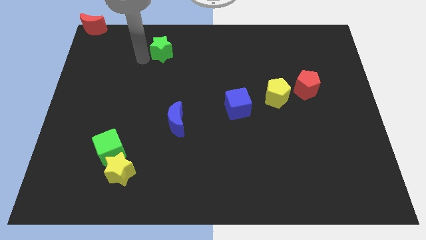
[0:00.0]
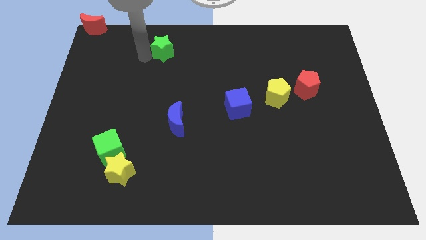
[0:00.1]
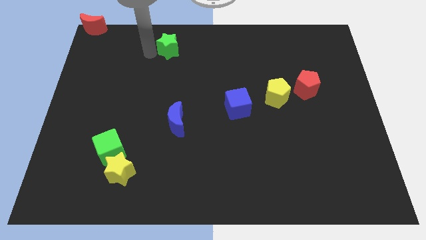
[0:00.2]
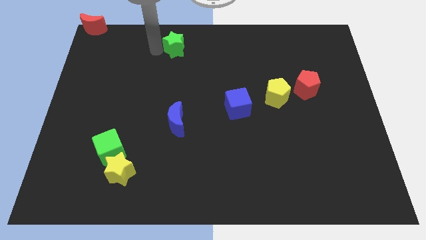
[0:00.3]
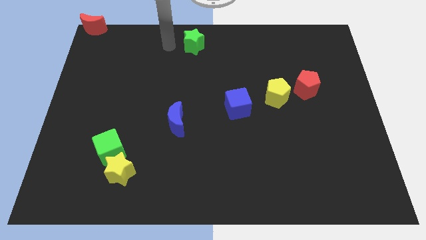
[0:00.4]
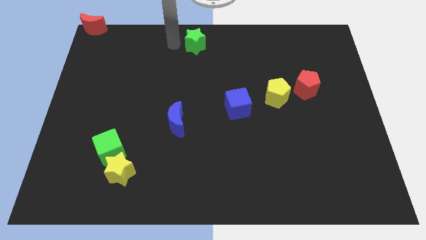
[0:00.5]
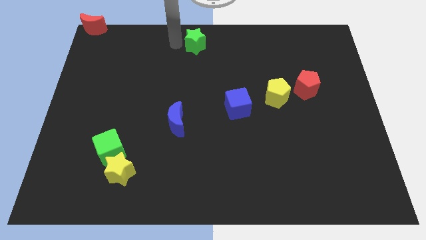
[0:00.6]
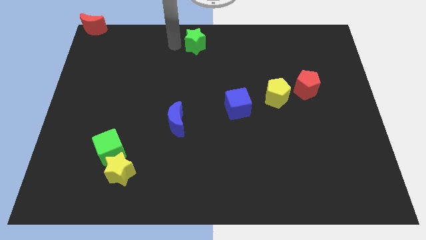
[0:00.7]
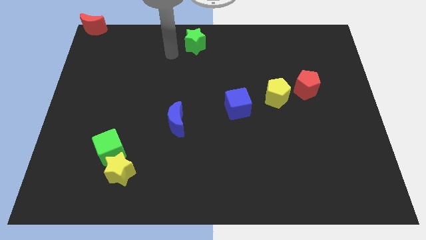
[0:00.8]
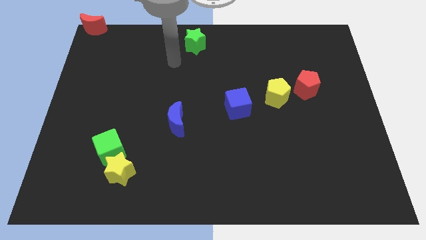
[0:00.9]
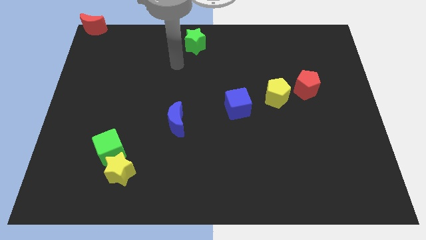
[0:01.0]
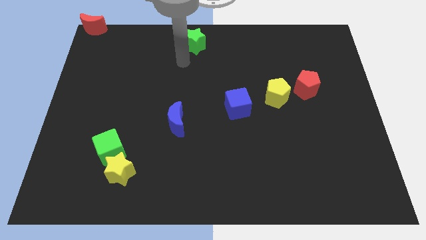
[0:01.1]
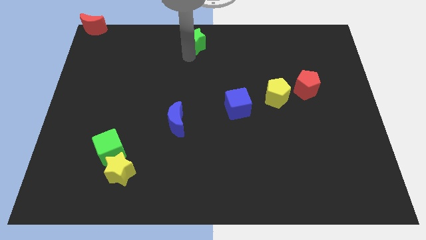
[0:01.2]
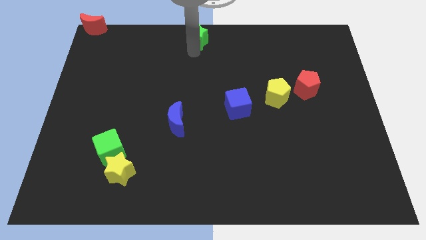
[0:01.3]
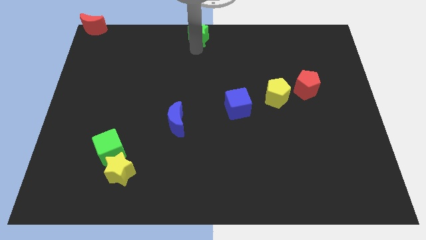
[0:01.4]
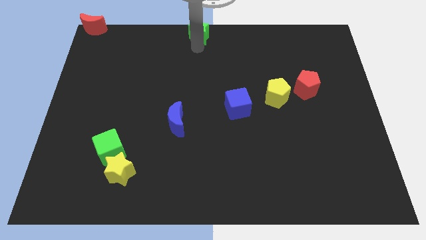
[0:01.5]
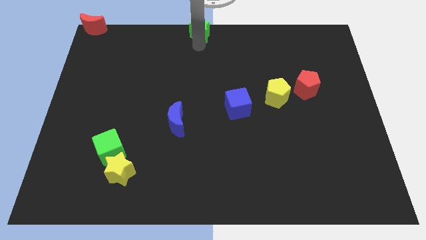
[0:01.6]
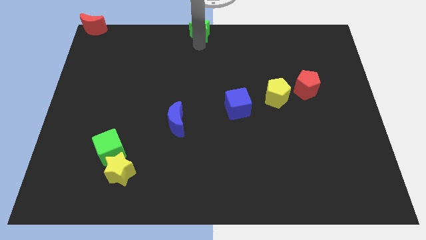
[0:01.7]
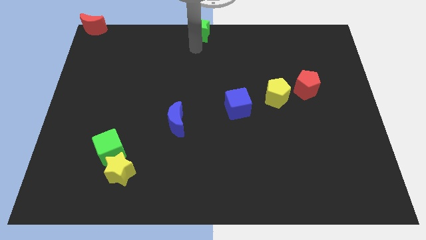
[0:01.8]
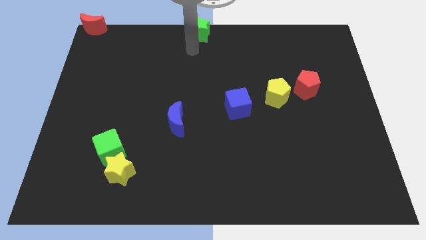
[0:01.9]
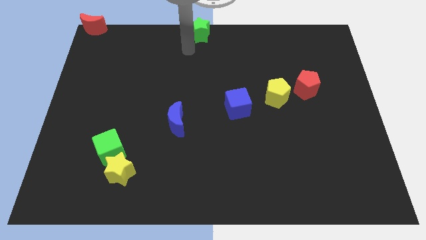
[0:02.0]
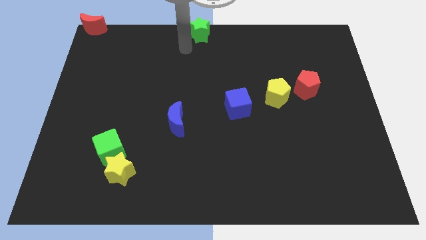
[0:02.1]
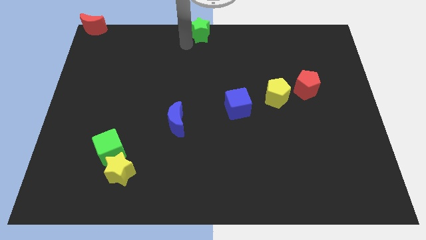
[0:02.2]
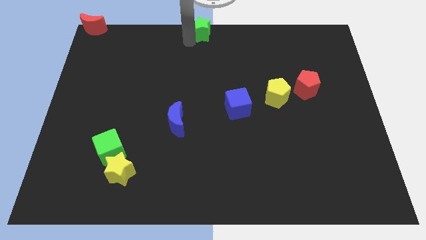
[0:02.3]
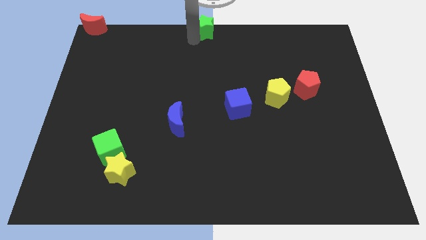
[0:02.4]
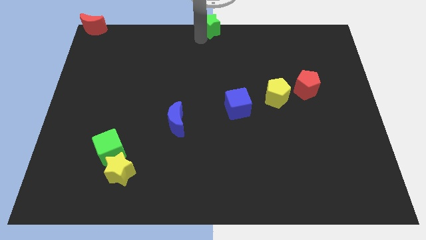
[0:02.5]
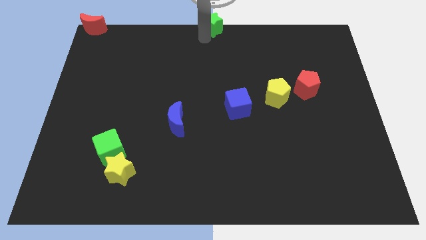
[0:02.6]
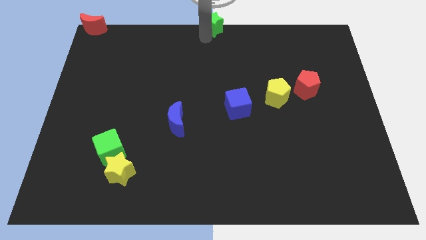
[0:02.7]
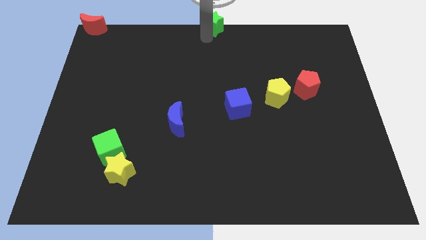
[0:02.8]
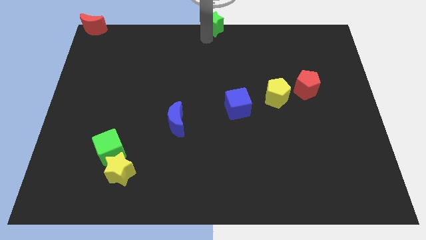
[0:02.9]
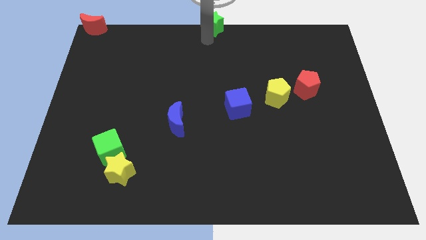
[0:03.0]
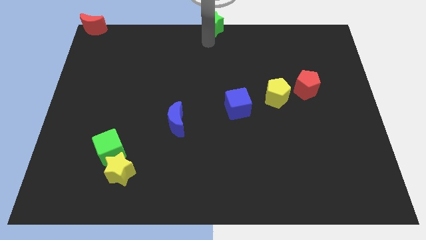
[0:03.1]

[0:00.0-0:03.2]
place green star towards top middle end of the board

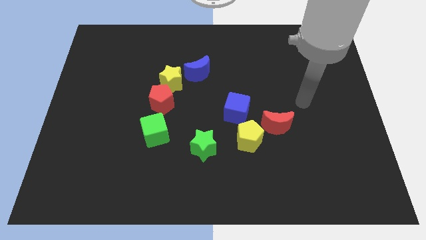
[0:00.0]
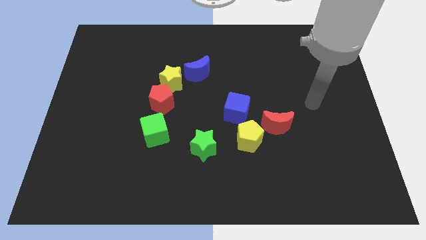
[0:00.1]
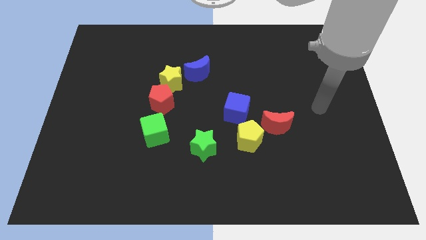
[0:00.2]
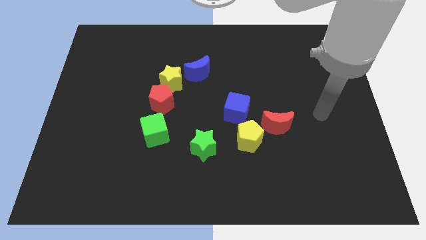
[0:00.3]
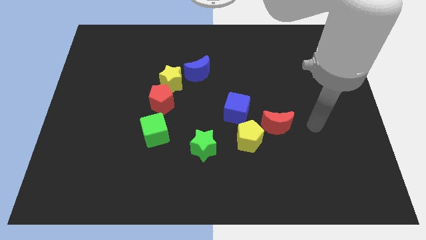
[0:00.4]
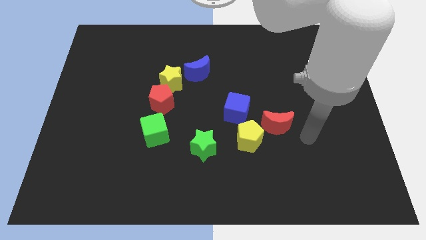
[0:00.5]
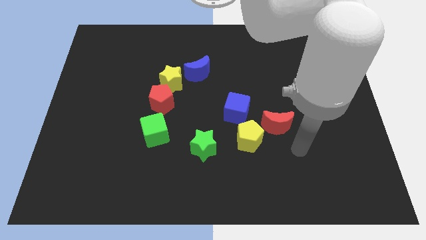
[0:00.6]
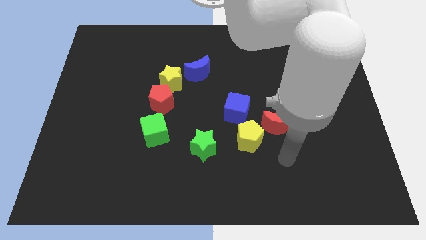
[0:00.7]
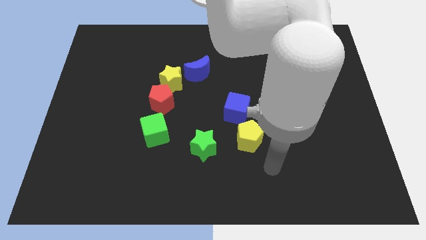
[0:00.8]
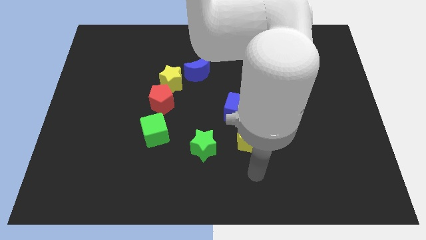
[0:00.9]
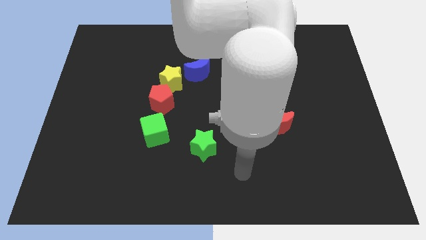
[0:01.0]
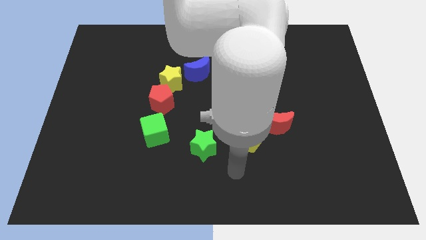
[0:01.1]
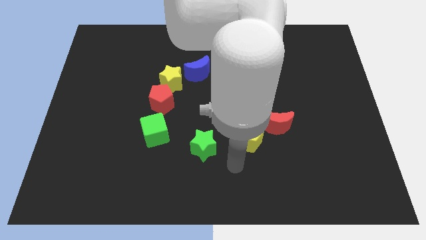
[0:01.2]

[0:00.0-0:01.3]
point your arm at the bottom of the yellow pentagon

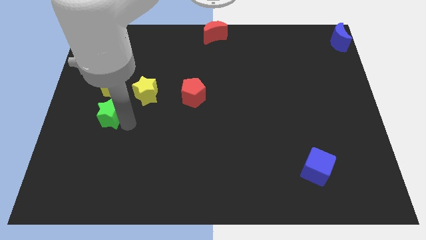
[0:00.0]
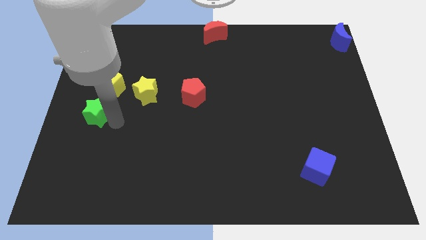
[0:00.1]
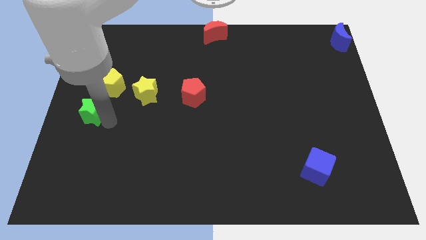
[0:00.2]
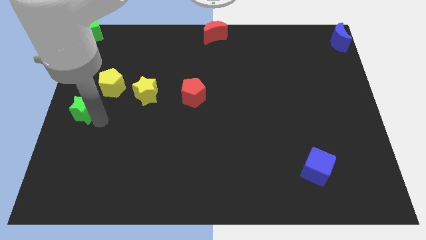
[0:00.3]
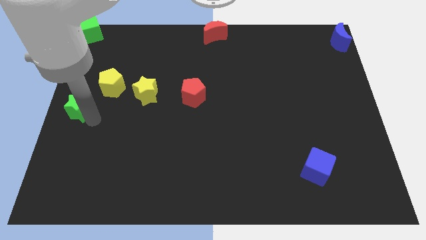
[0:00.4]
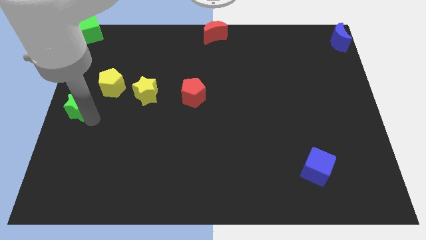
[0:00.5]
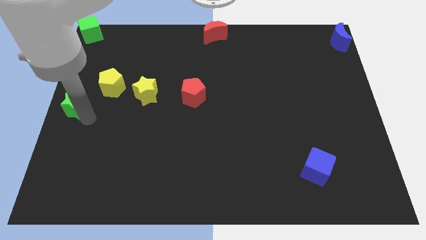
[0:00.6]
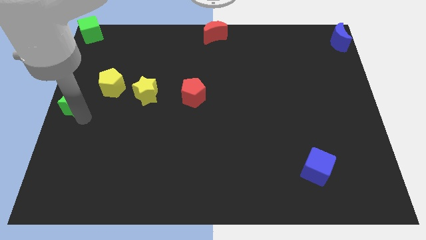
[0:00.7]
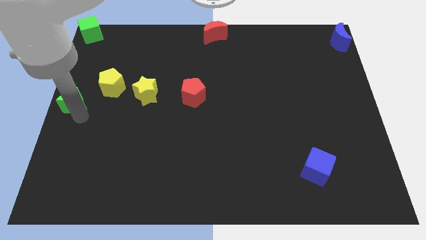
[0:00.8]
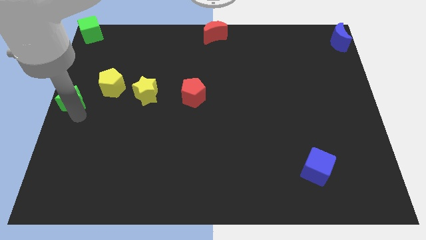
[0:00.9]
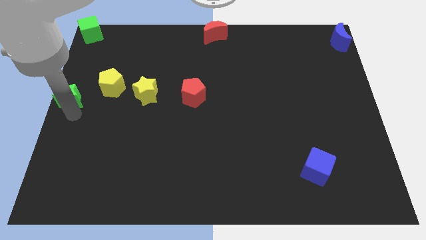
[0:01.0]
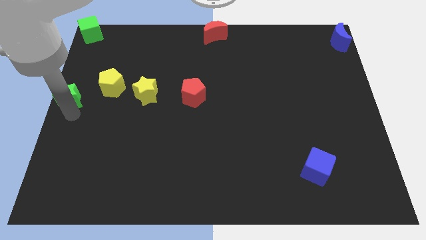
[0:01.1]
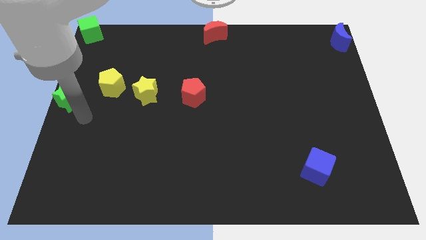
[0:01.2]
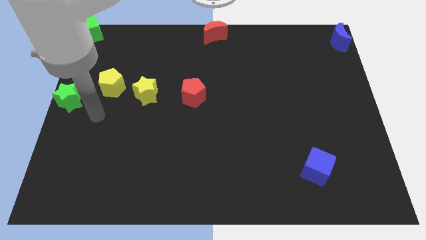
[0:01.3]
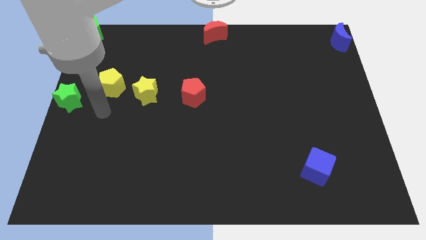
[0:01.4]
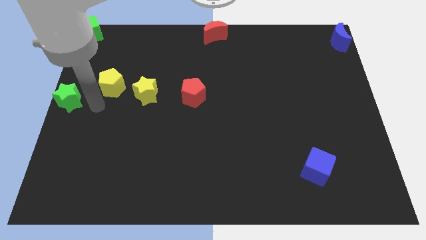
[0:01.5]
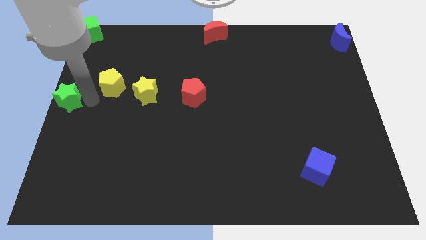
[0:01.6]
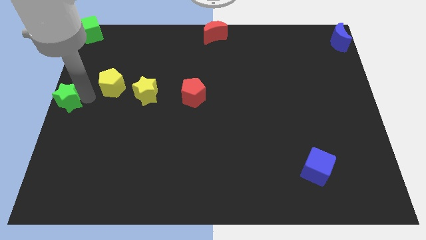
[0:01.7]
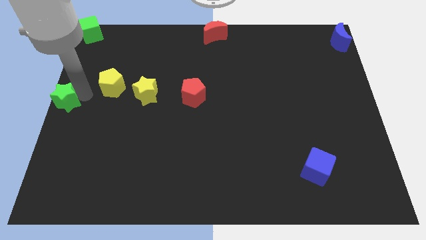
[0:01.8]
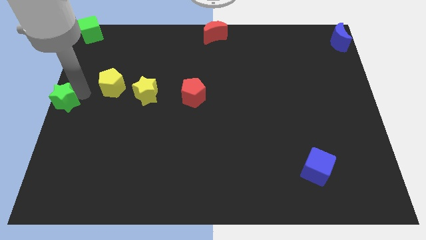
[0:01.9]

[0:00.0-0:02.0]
place the green star to the left center of the board

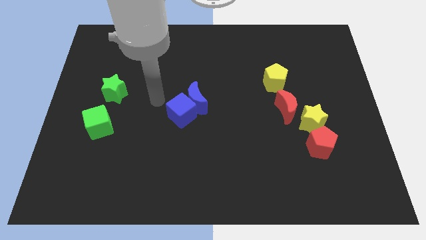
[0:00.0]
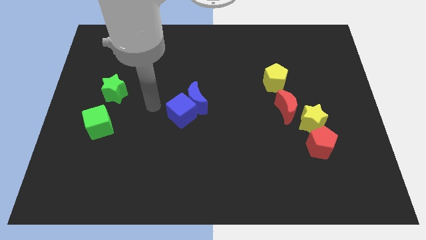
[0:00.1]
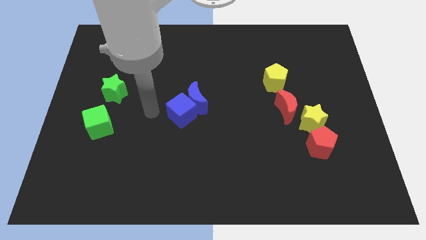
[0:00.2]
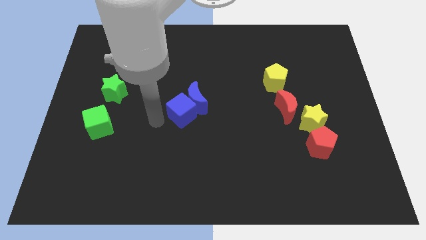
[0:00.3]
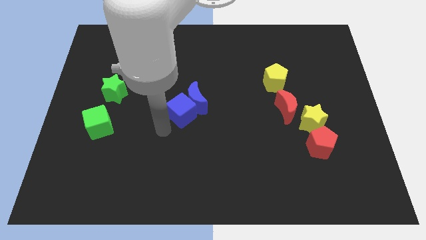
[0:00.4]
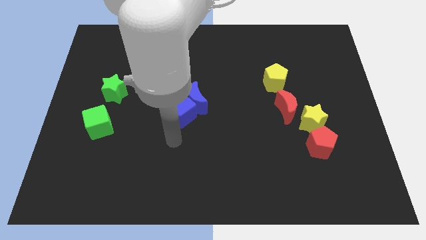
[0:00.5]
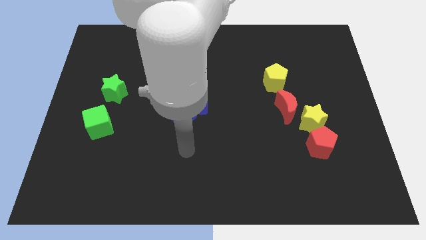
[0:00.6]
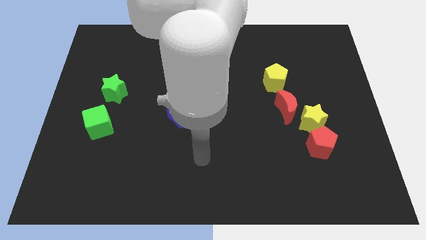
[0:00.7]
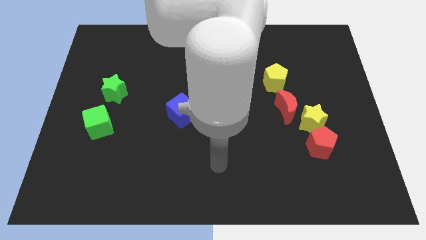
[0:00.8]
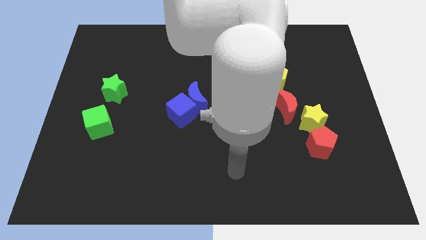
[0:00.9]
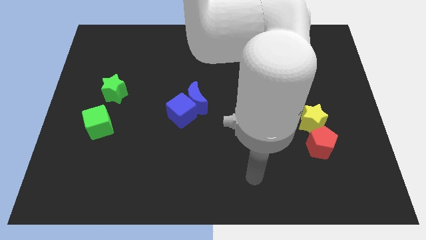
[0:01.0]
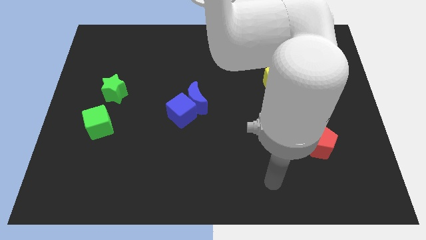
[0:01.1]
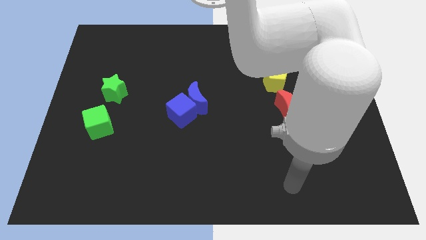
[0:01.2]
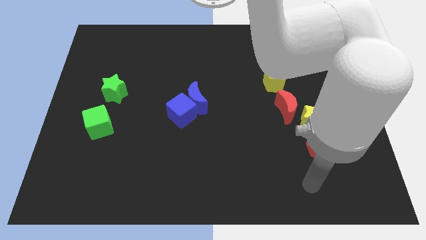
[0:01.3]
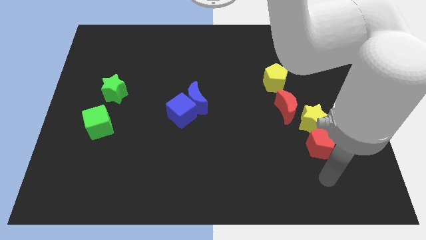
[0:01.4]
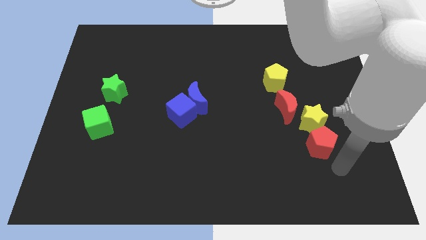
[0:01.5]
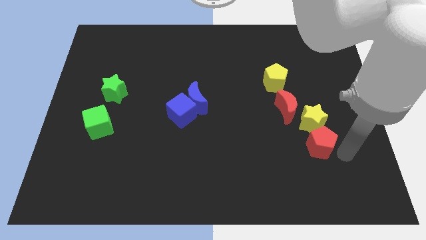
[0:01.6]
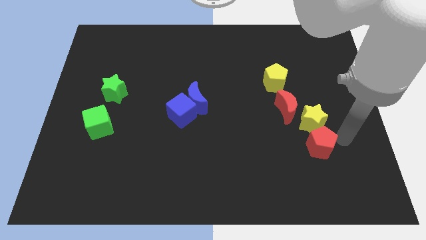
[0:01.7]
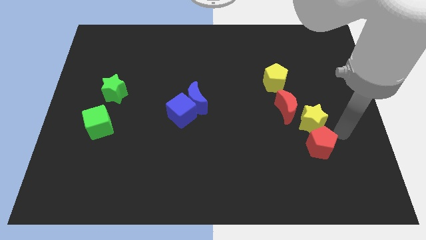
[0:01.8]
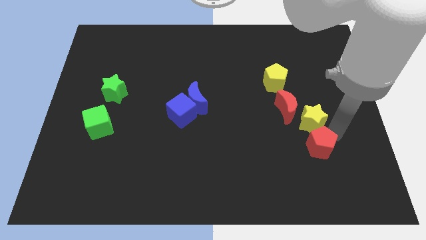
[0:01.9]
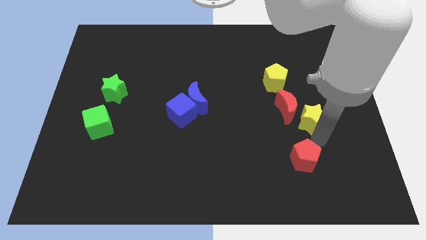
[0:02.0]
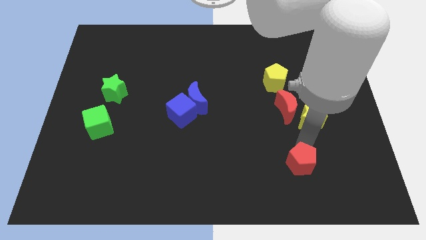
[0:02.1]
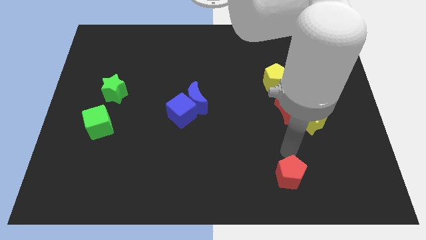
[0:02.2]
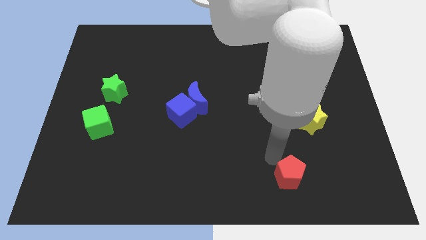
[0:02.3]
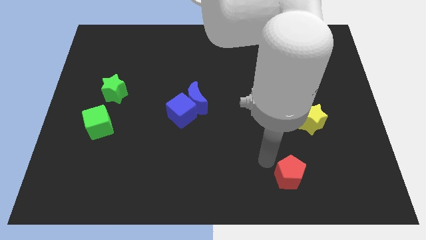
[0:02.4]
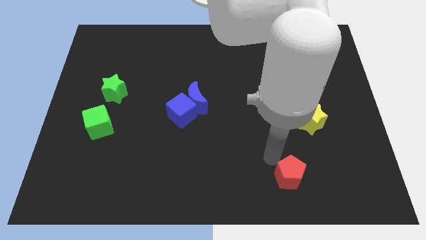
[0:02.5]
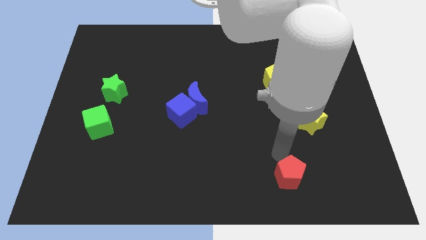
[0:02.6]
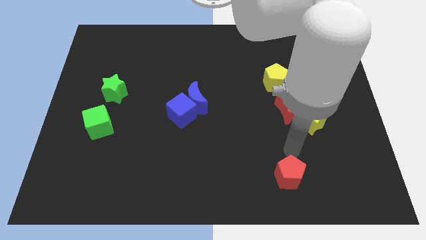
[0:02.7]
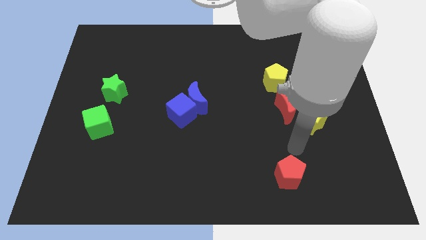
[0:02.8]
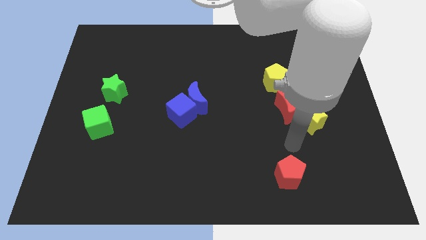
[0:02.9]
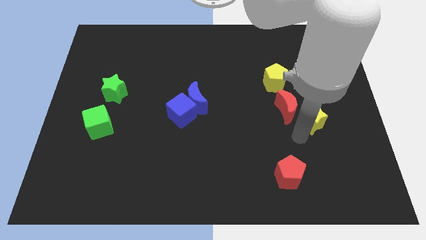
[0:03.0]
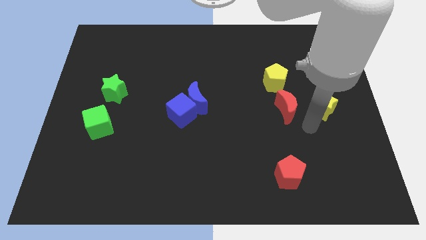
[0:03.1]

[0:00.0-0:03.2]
separate red pentagon from yellow star
